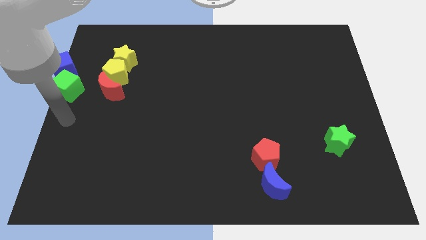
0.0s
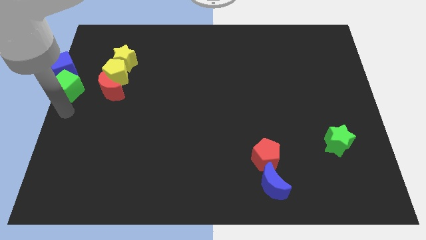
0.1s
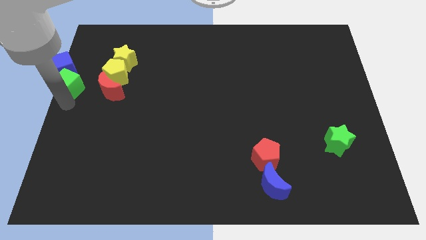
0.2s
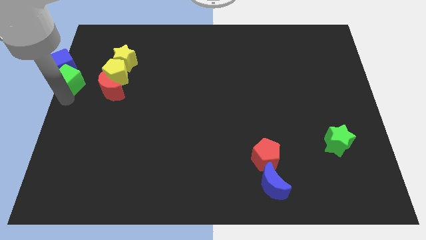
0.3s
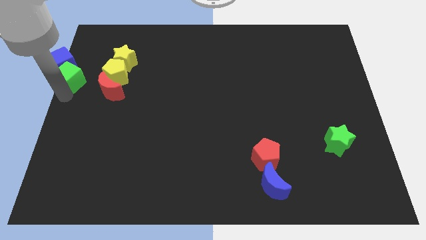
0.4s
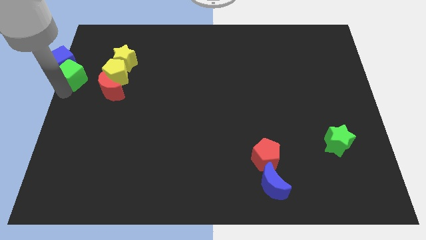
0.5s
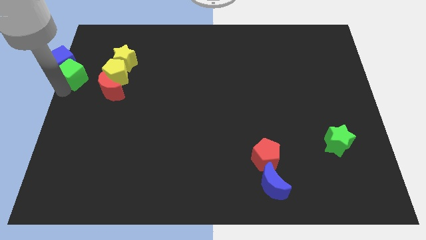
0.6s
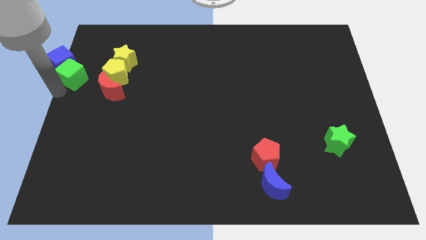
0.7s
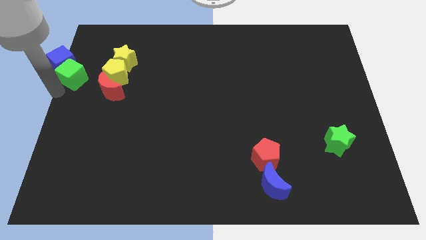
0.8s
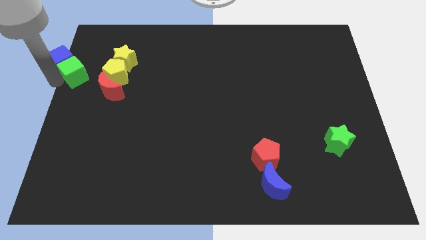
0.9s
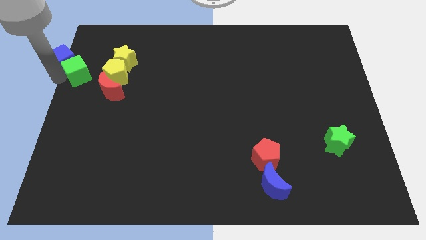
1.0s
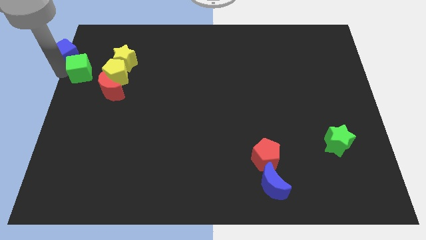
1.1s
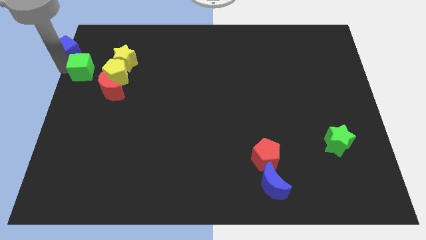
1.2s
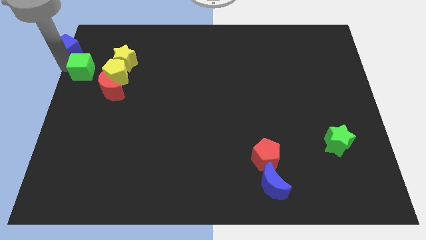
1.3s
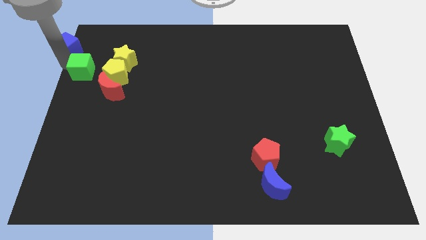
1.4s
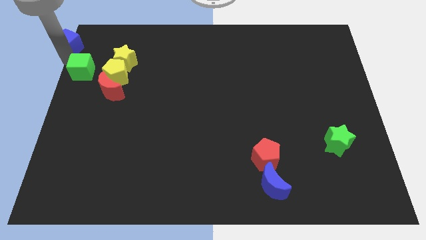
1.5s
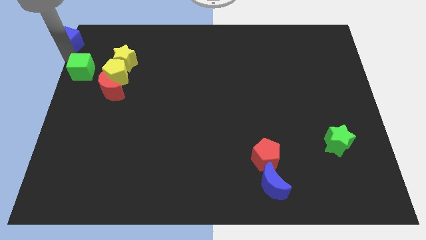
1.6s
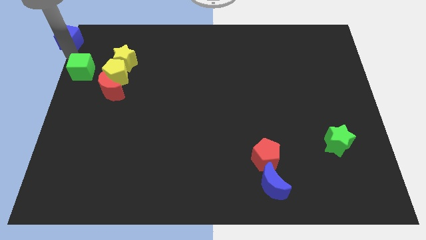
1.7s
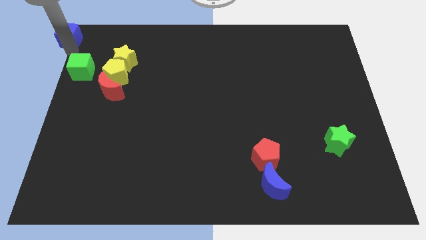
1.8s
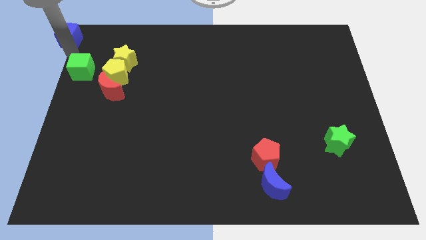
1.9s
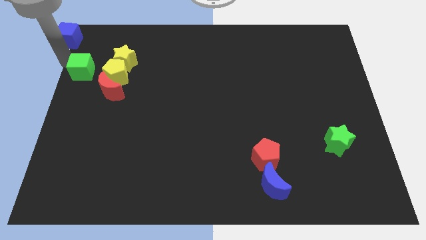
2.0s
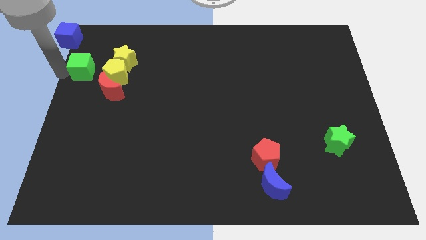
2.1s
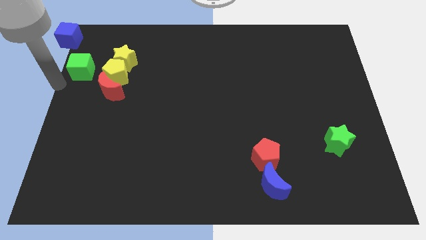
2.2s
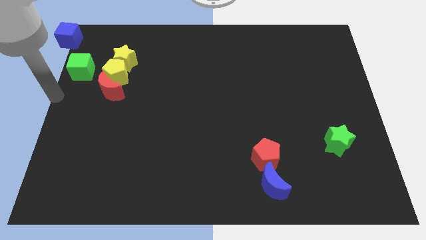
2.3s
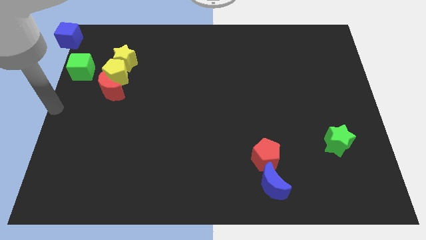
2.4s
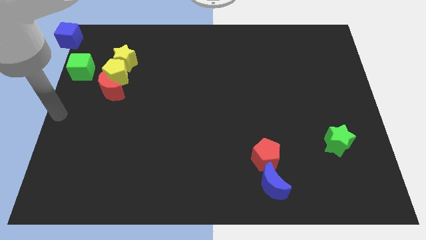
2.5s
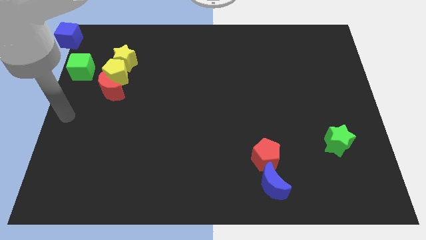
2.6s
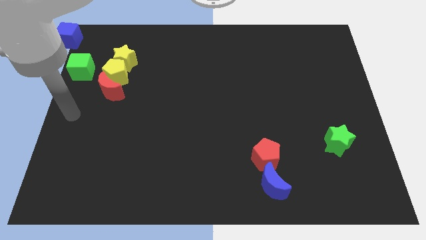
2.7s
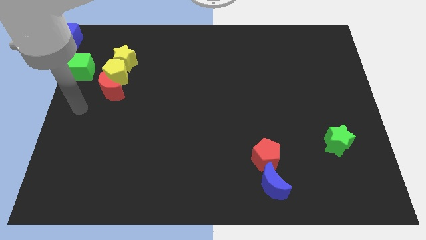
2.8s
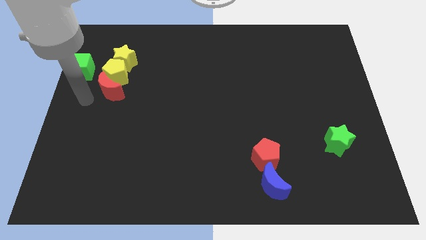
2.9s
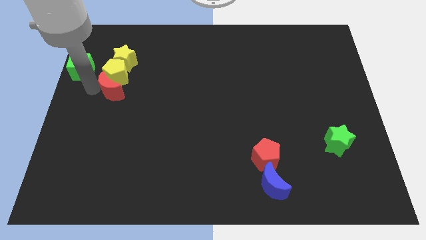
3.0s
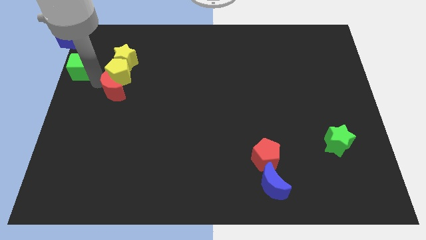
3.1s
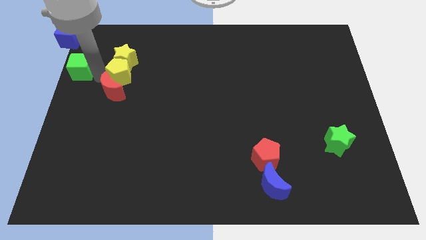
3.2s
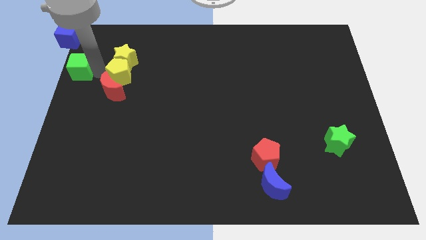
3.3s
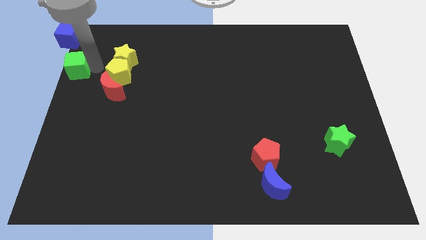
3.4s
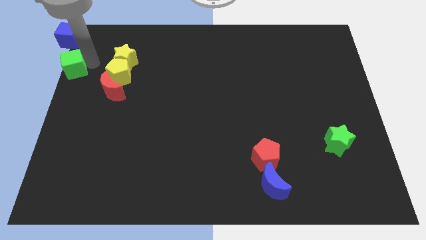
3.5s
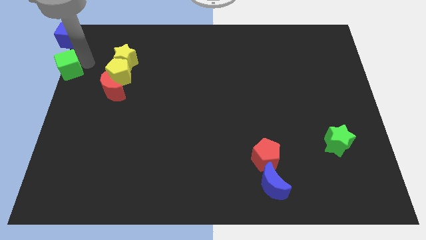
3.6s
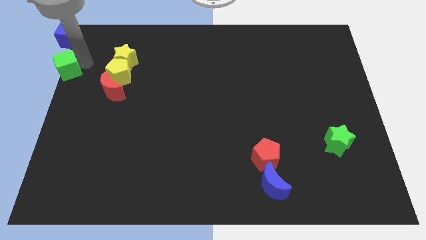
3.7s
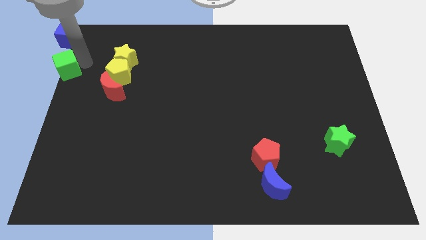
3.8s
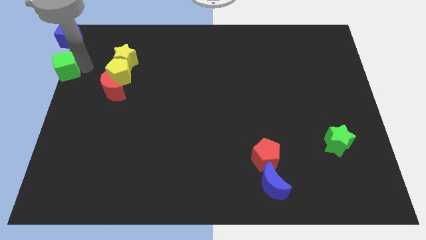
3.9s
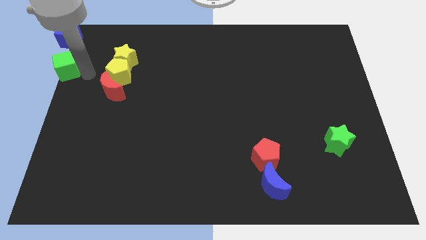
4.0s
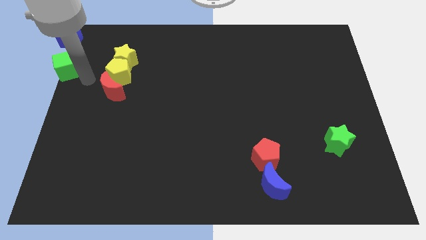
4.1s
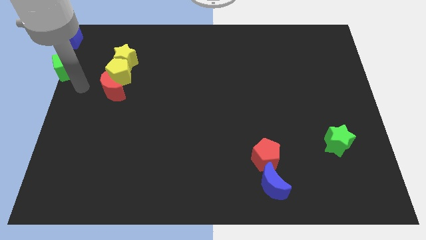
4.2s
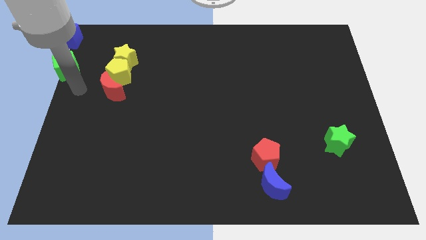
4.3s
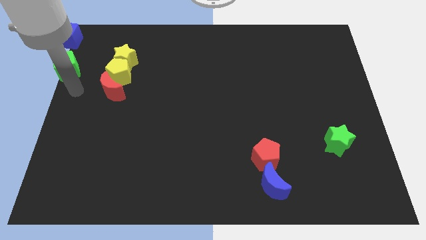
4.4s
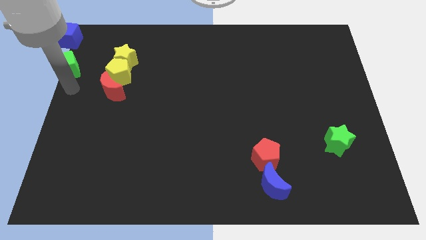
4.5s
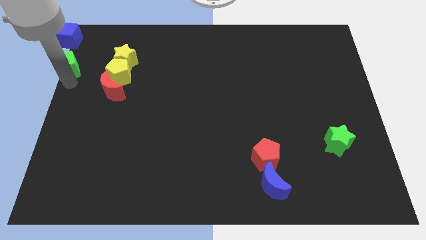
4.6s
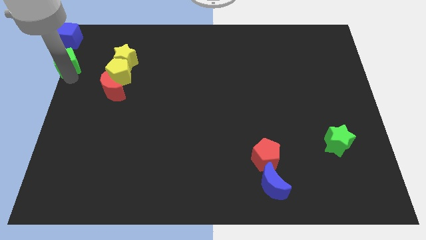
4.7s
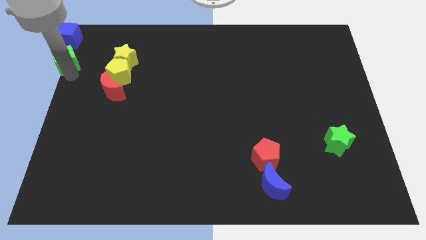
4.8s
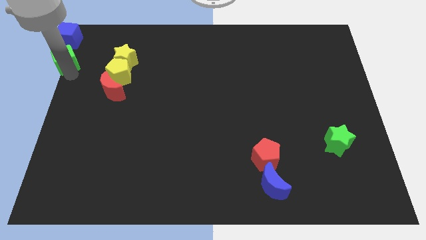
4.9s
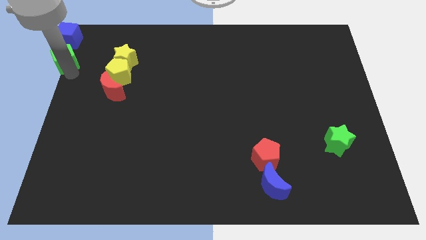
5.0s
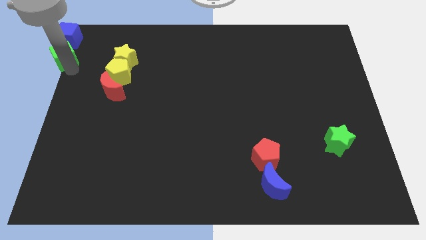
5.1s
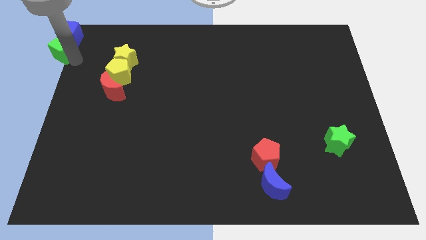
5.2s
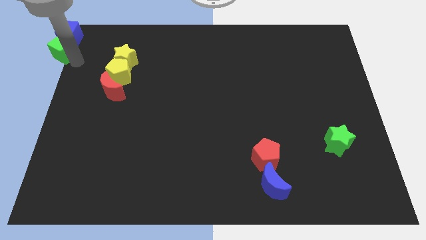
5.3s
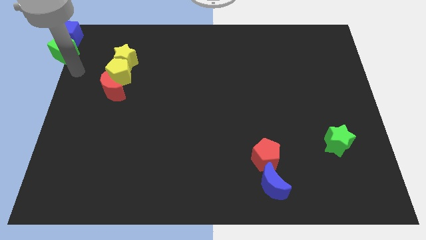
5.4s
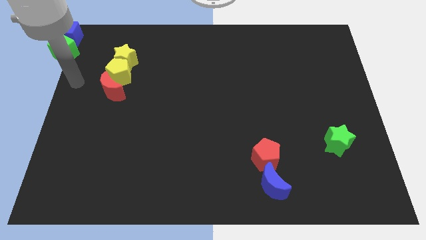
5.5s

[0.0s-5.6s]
put the cubes at the top left corner of the board

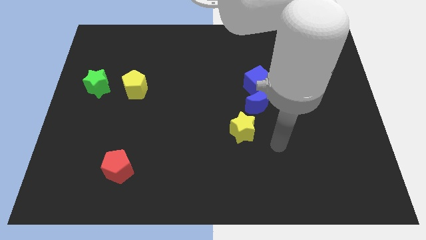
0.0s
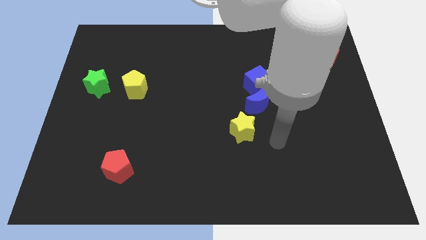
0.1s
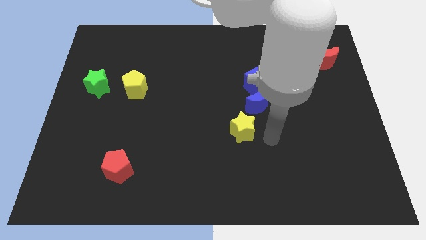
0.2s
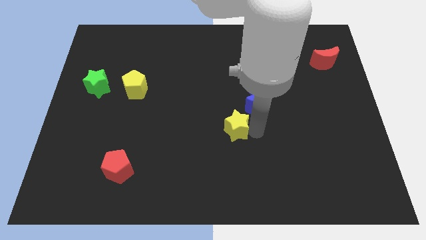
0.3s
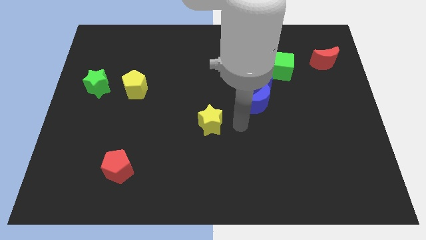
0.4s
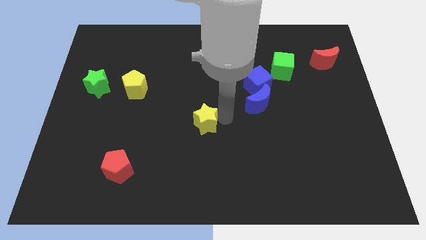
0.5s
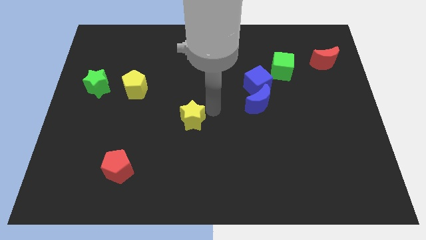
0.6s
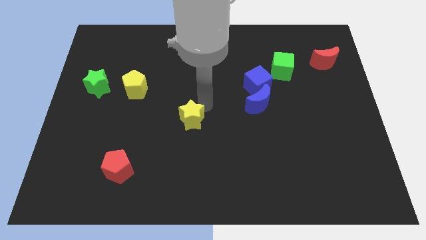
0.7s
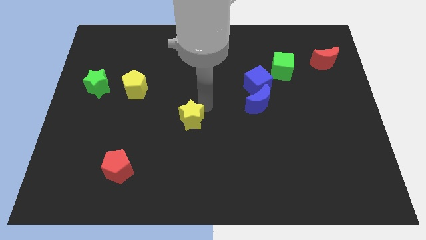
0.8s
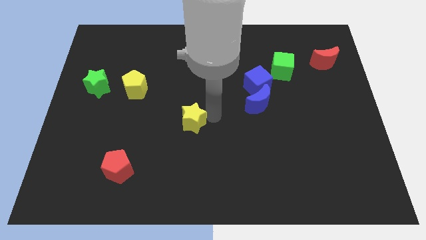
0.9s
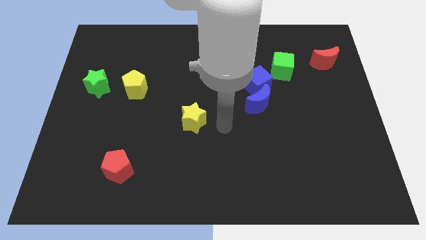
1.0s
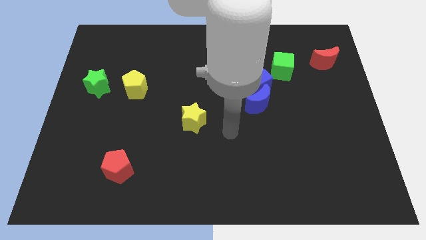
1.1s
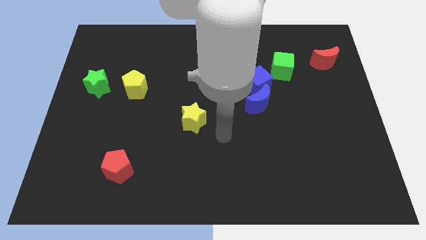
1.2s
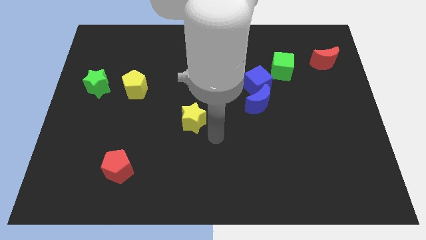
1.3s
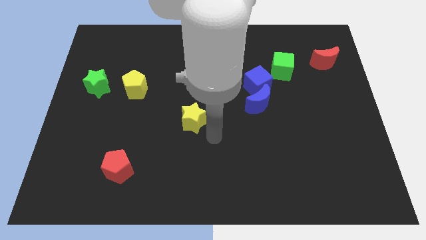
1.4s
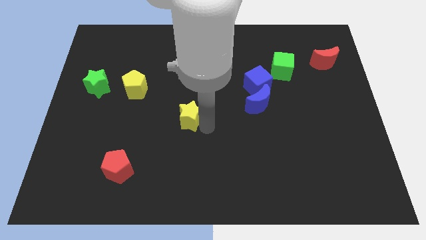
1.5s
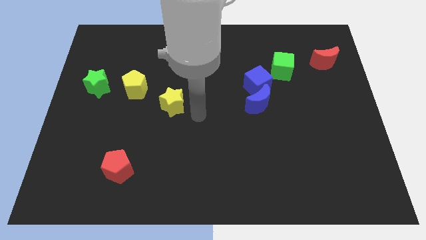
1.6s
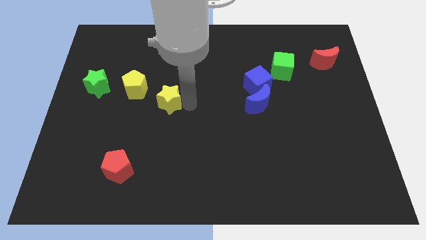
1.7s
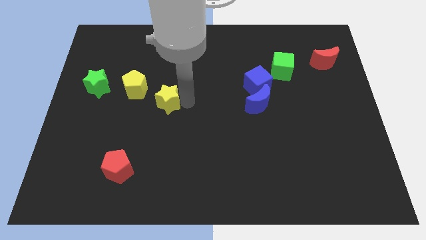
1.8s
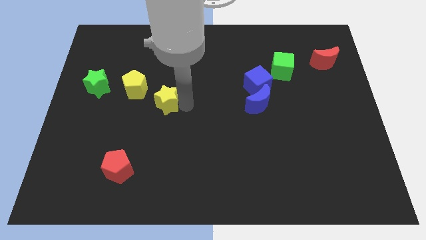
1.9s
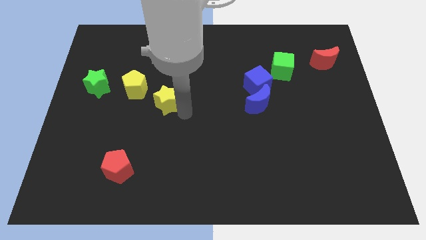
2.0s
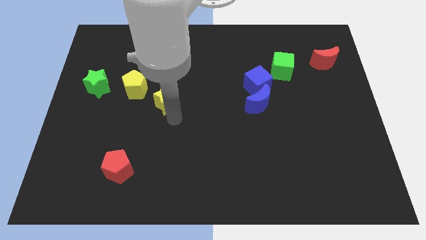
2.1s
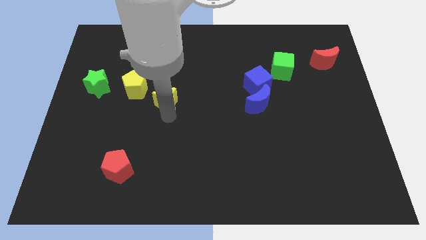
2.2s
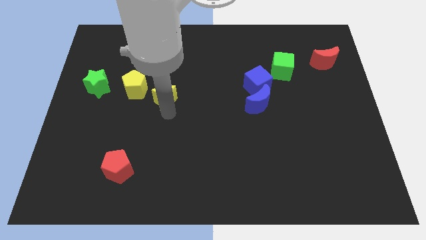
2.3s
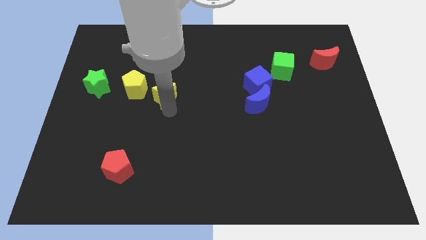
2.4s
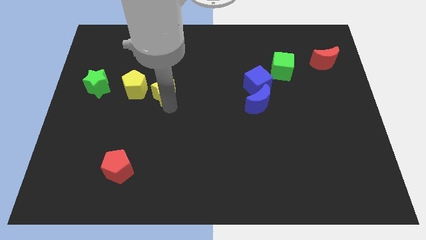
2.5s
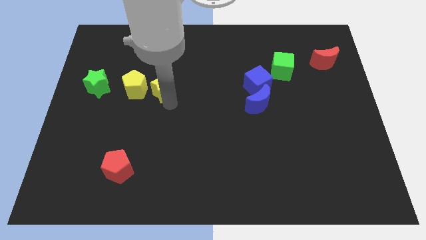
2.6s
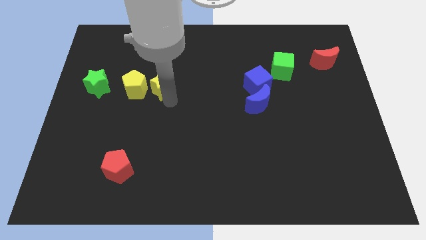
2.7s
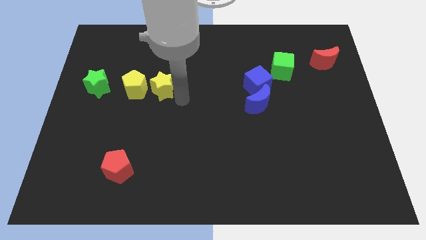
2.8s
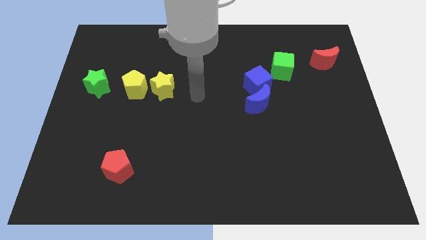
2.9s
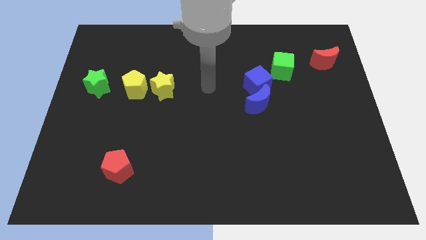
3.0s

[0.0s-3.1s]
move the yellow star on the right side of the yellow pentagon

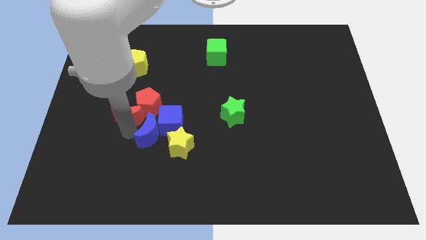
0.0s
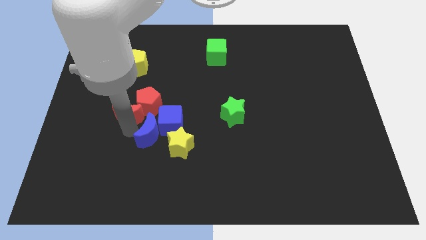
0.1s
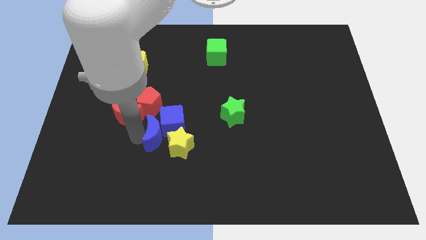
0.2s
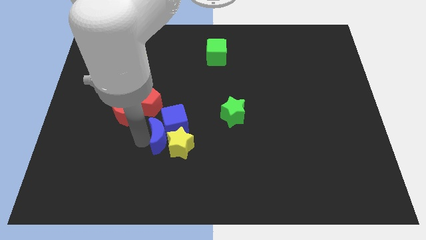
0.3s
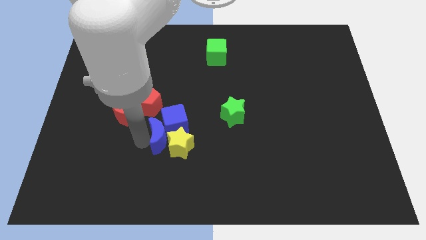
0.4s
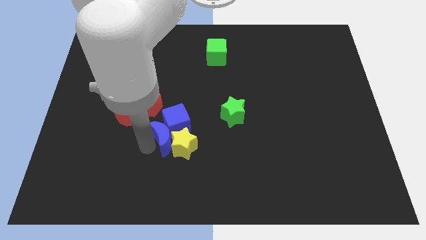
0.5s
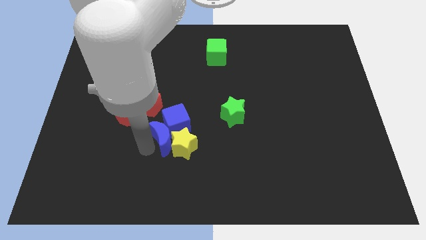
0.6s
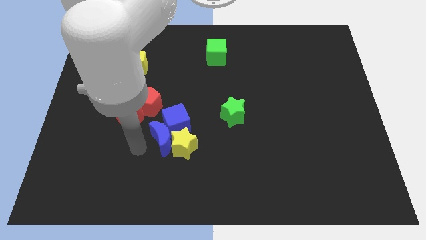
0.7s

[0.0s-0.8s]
push the blue crescent into the yellow star
